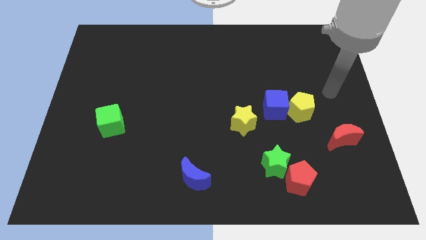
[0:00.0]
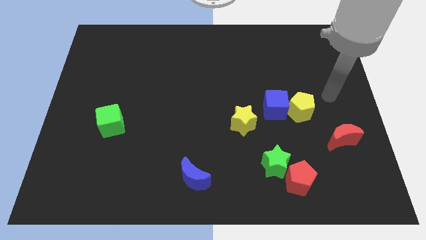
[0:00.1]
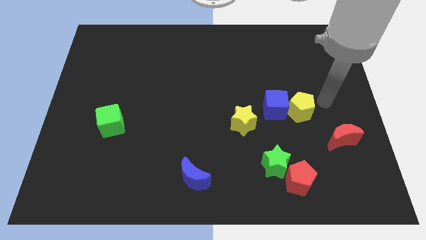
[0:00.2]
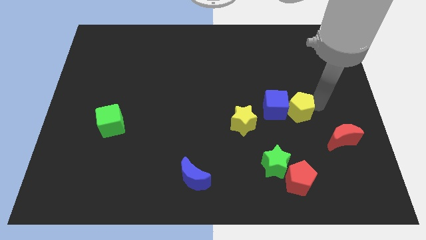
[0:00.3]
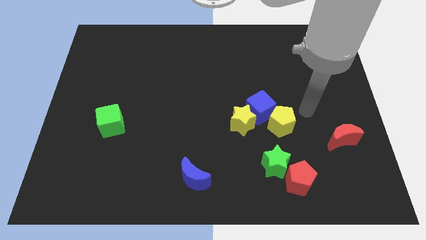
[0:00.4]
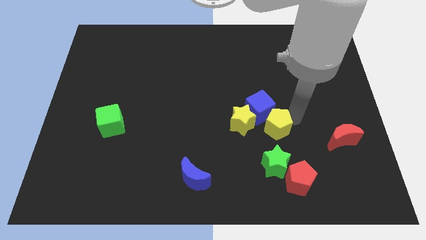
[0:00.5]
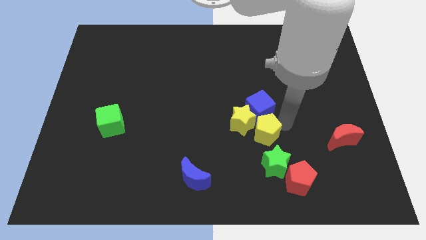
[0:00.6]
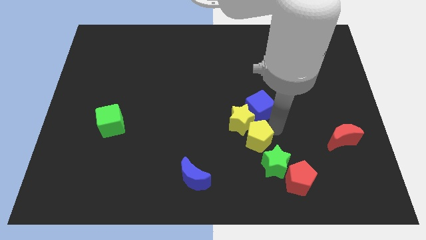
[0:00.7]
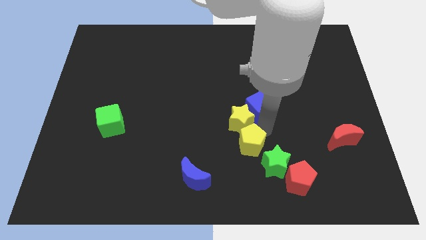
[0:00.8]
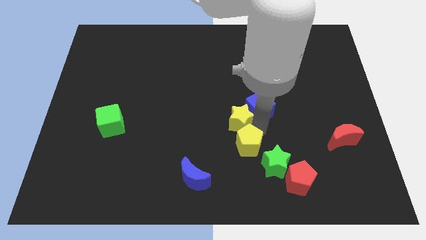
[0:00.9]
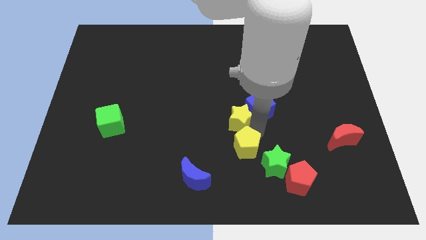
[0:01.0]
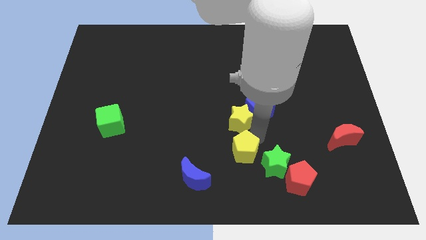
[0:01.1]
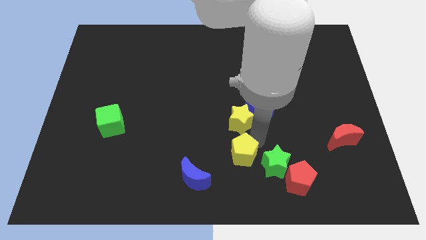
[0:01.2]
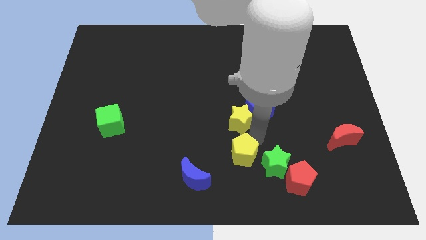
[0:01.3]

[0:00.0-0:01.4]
move the yellow pentagon to the bottom of the yellow star

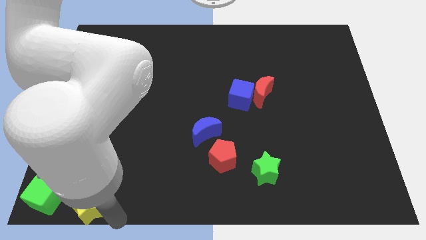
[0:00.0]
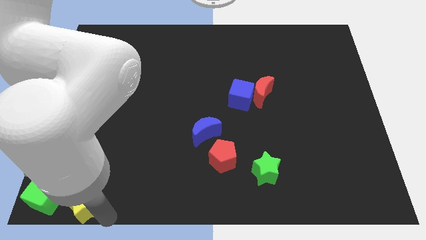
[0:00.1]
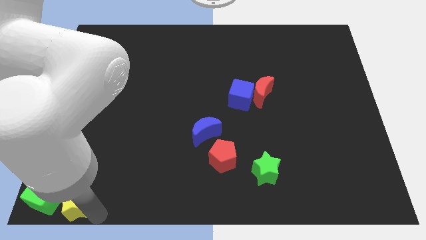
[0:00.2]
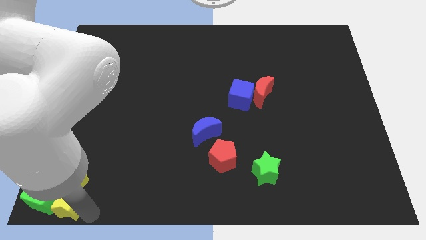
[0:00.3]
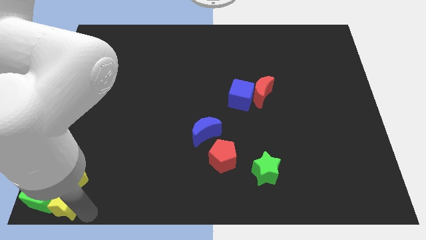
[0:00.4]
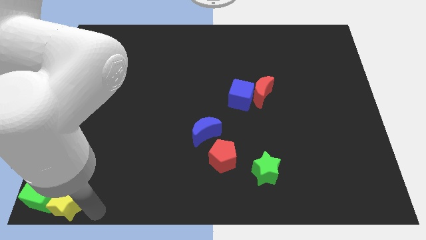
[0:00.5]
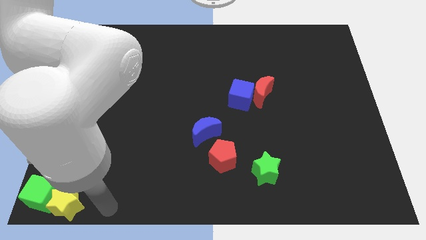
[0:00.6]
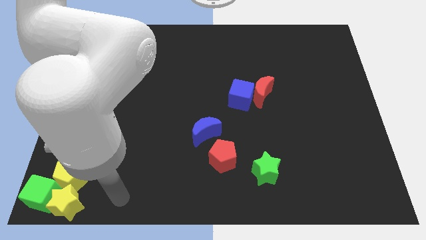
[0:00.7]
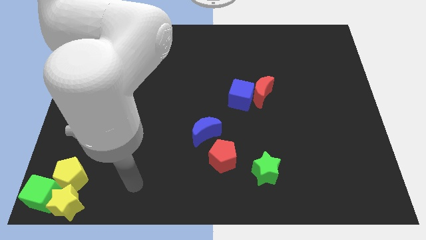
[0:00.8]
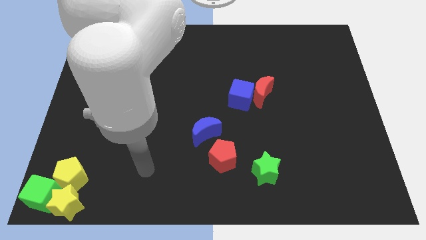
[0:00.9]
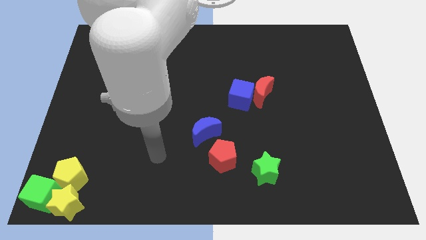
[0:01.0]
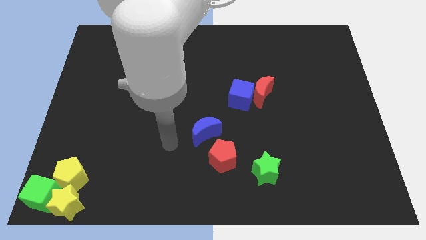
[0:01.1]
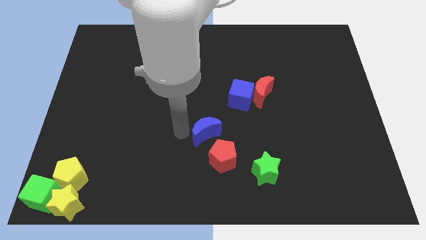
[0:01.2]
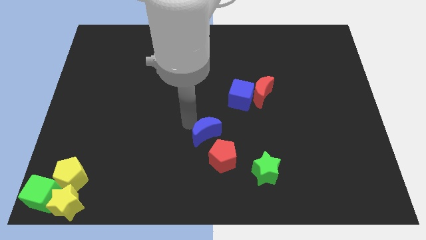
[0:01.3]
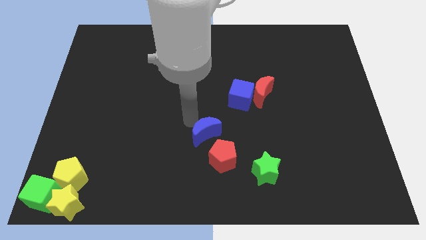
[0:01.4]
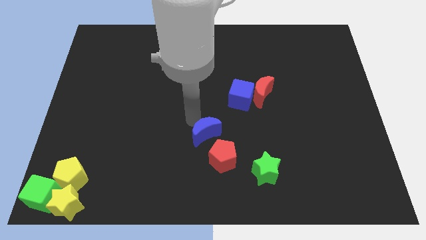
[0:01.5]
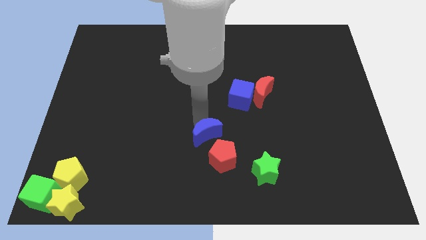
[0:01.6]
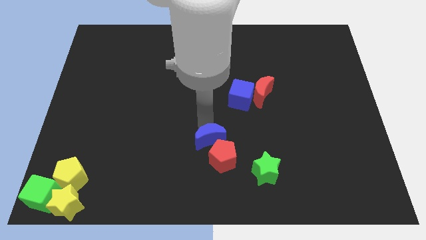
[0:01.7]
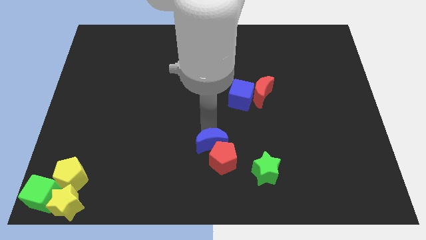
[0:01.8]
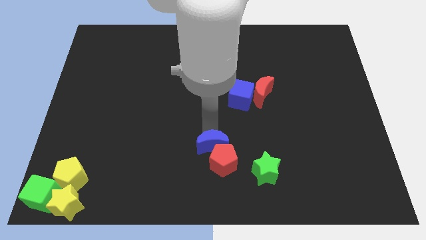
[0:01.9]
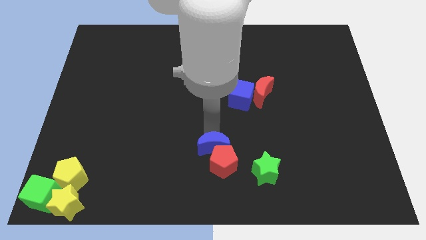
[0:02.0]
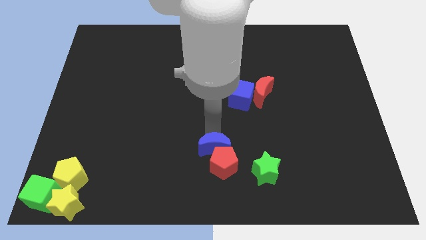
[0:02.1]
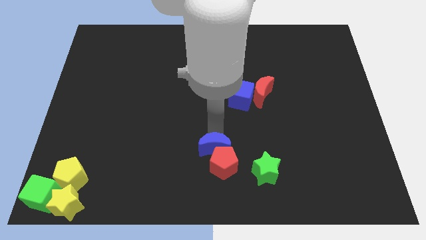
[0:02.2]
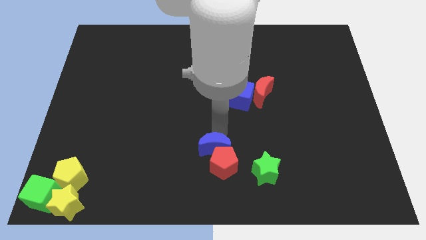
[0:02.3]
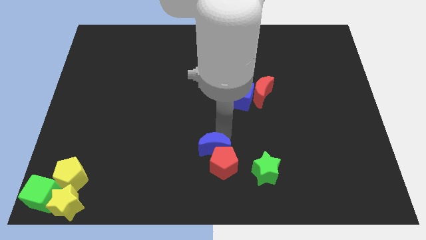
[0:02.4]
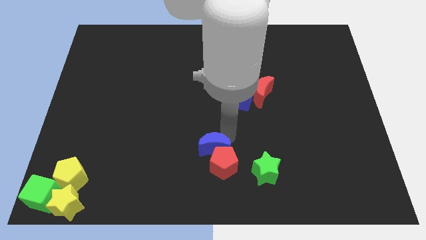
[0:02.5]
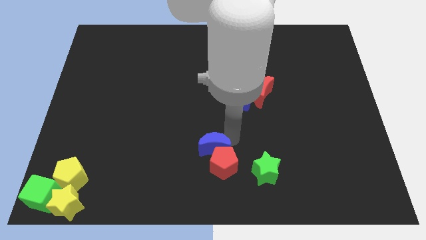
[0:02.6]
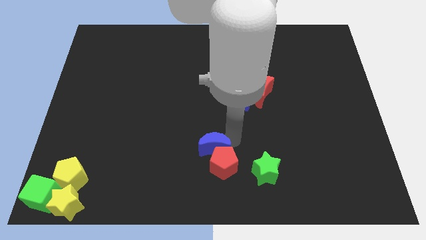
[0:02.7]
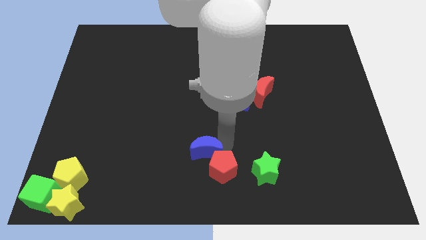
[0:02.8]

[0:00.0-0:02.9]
move the blue moon into the red pentagon

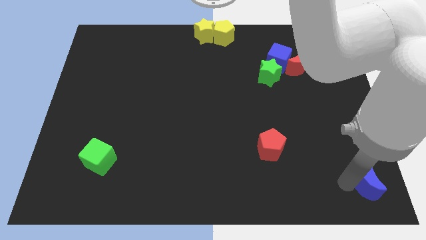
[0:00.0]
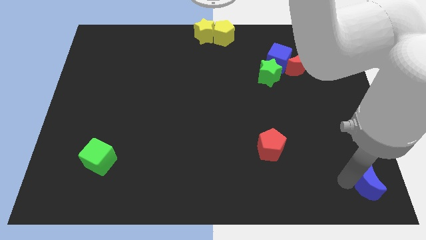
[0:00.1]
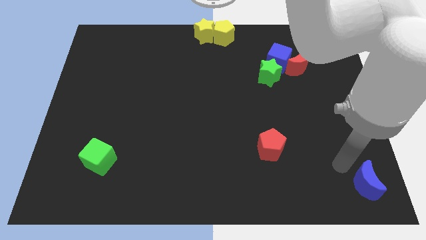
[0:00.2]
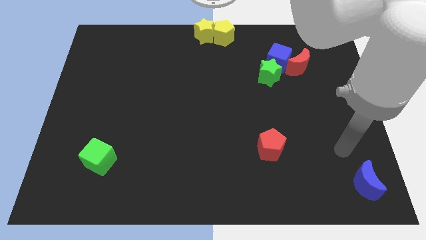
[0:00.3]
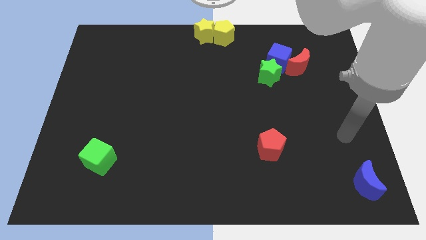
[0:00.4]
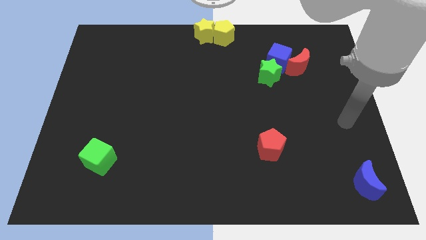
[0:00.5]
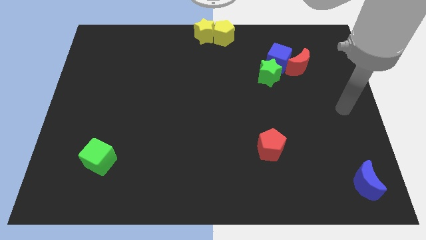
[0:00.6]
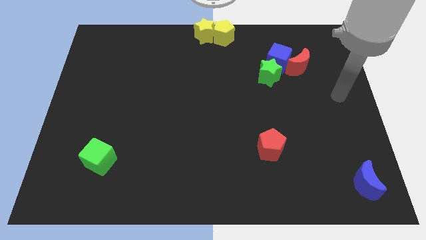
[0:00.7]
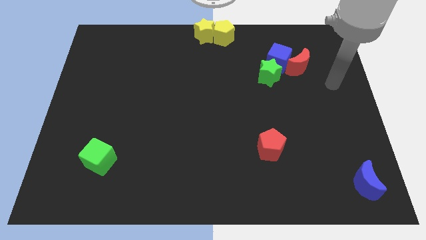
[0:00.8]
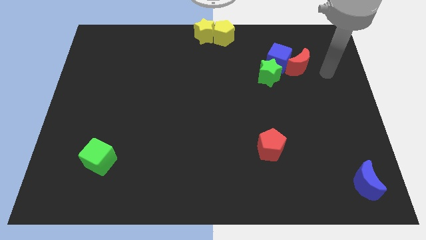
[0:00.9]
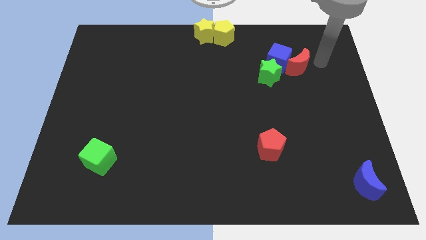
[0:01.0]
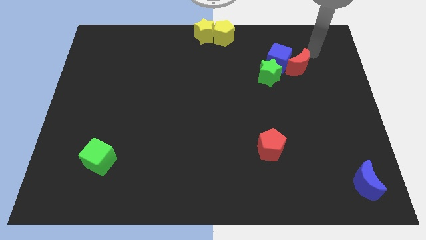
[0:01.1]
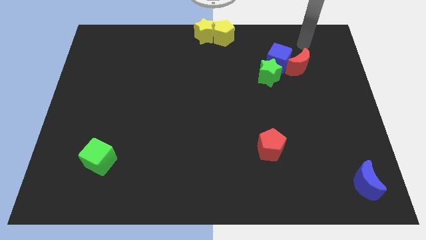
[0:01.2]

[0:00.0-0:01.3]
move your hand away from the blue moon

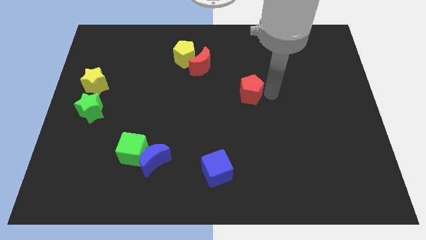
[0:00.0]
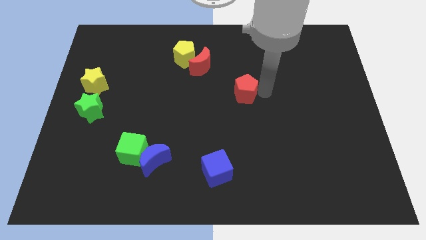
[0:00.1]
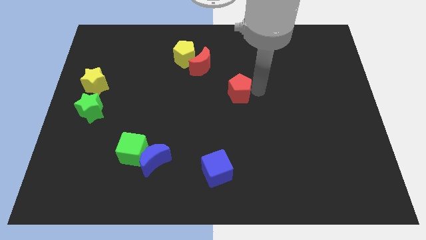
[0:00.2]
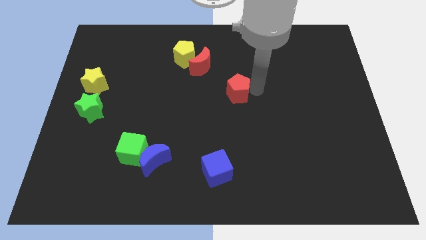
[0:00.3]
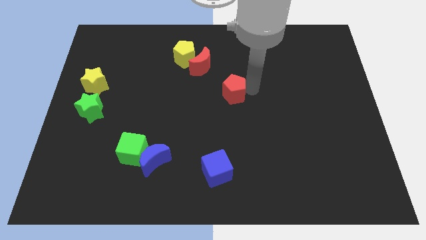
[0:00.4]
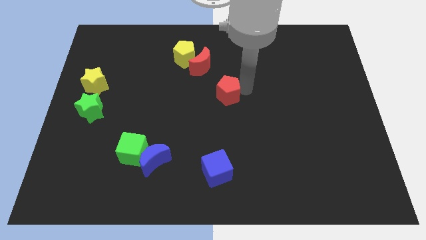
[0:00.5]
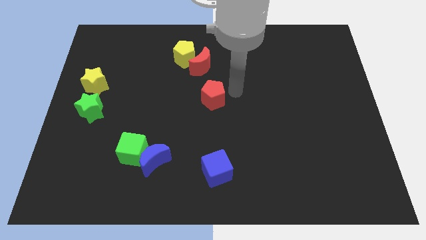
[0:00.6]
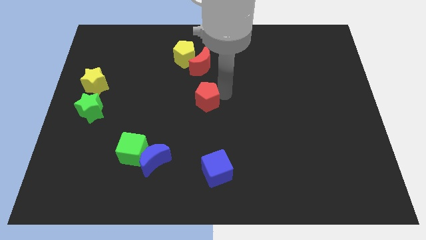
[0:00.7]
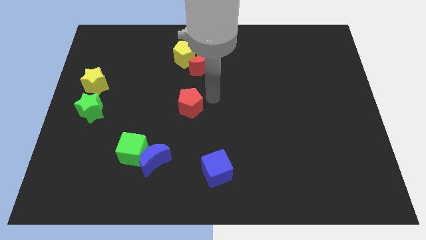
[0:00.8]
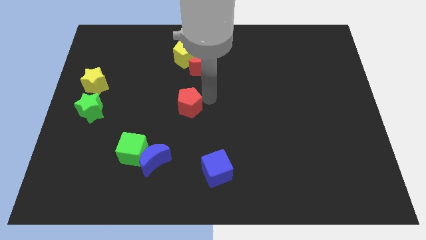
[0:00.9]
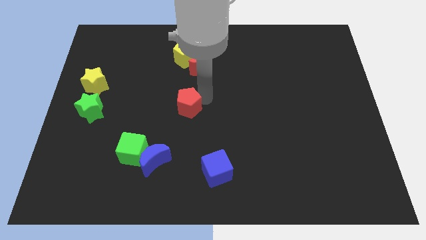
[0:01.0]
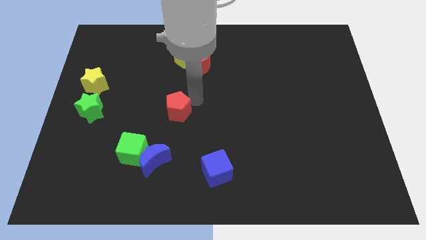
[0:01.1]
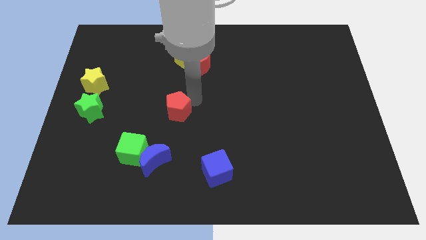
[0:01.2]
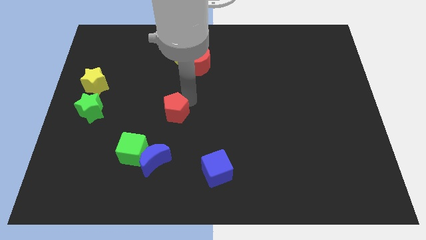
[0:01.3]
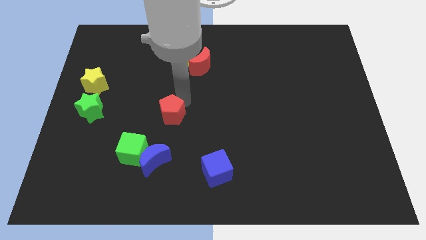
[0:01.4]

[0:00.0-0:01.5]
push the red pentagon above the blue moon

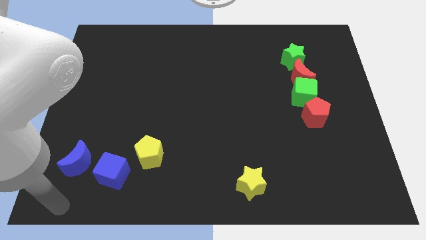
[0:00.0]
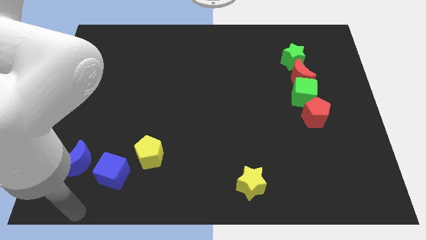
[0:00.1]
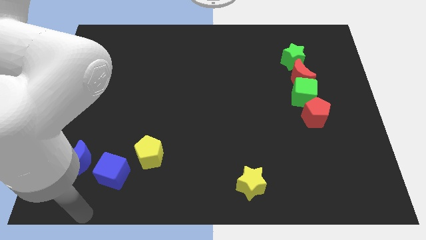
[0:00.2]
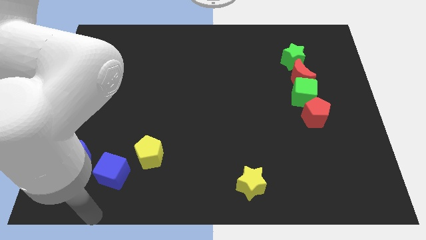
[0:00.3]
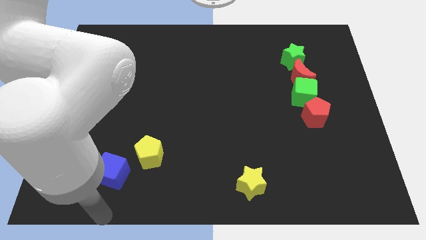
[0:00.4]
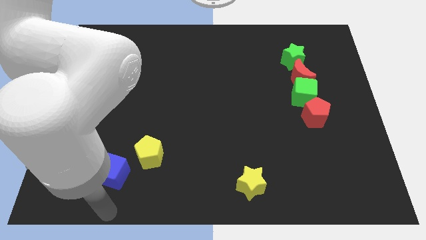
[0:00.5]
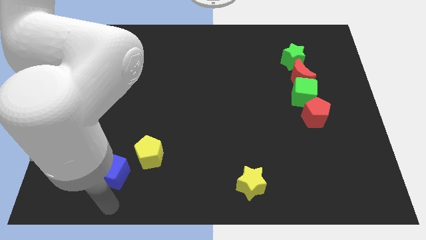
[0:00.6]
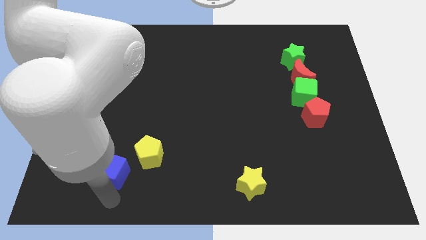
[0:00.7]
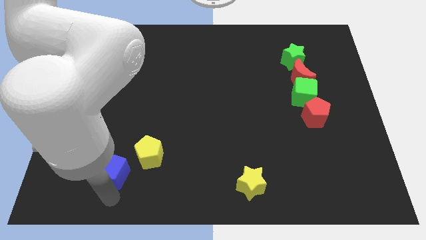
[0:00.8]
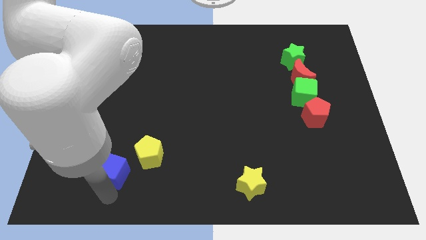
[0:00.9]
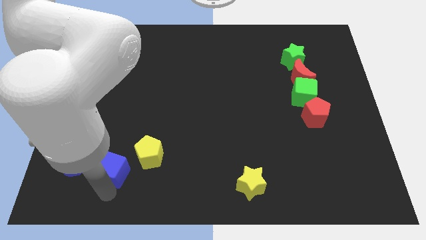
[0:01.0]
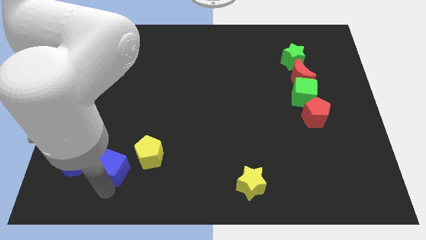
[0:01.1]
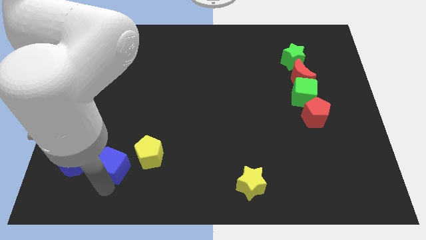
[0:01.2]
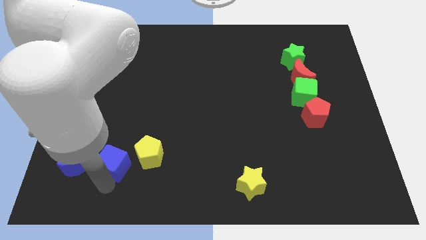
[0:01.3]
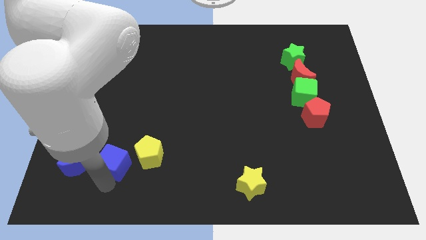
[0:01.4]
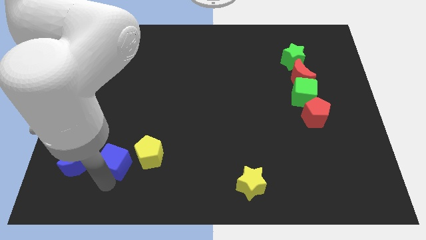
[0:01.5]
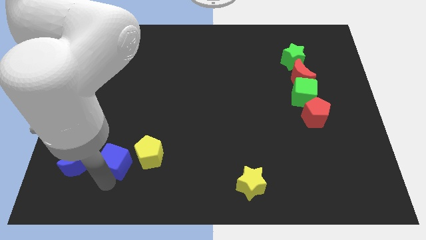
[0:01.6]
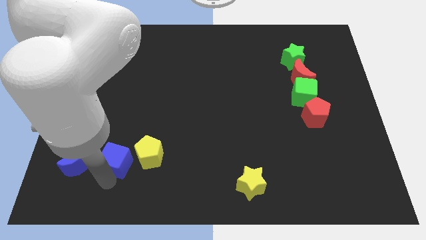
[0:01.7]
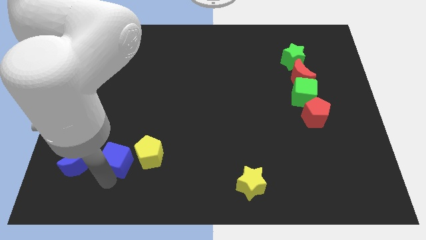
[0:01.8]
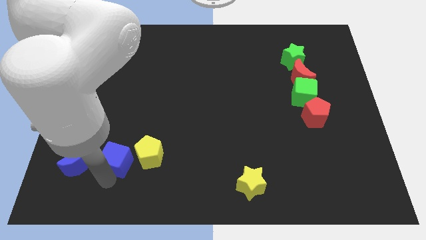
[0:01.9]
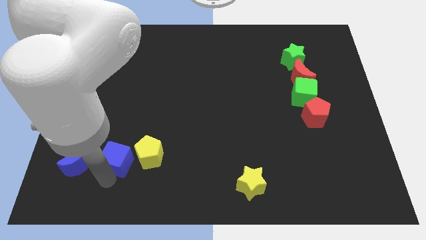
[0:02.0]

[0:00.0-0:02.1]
move the blue cube between the yellow pentagon and blue moon
